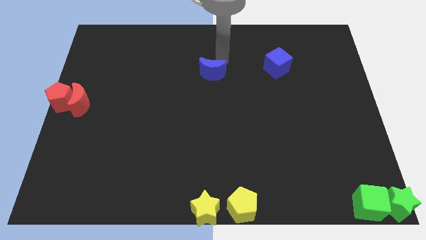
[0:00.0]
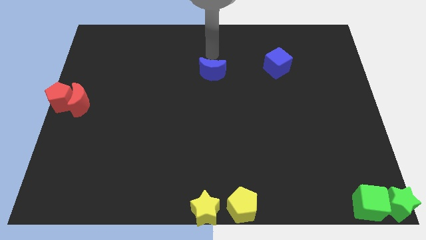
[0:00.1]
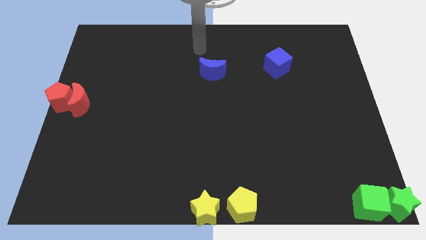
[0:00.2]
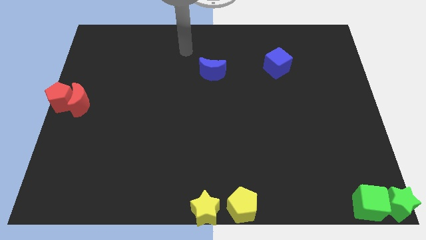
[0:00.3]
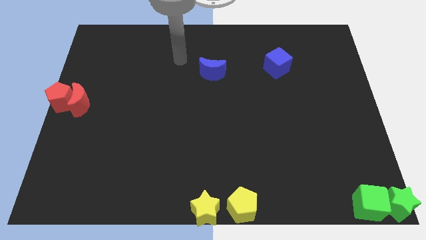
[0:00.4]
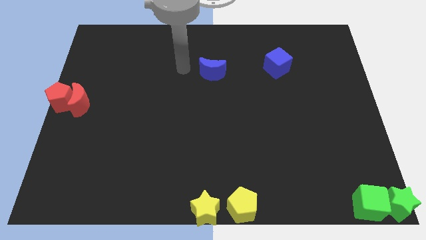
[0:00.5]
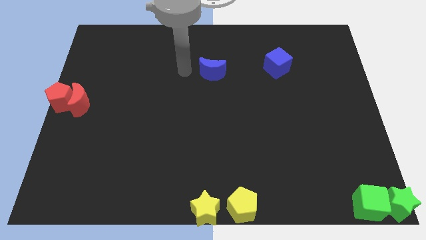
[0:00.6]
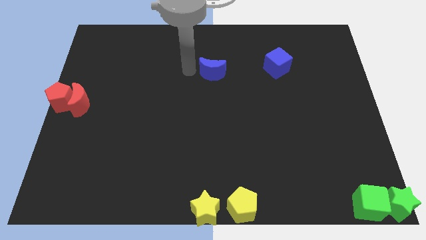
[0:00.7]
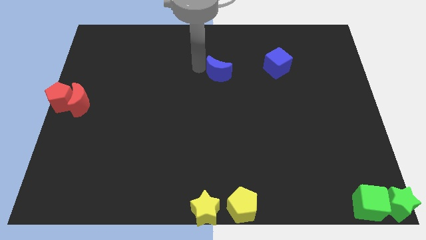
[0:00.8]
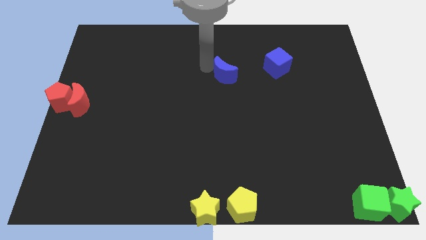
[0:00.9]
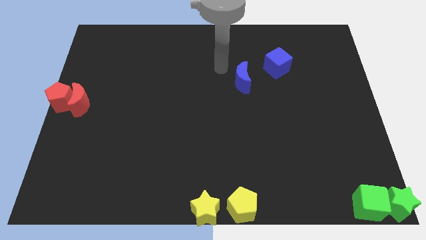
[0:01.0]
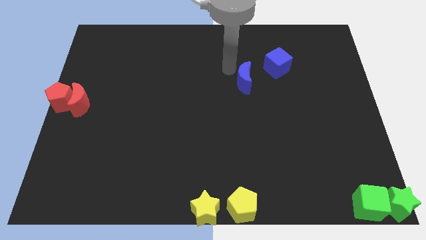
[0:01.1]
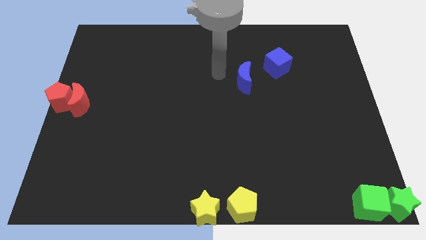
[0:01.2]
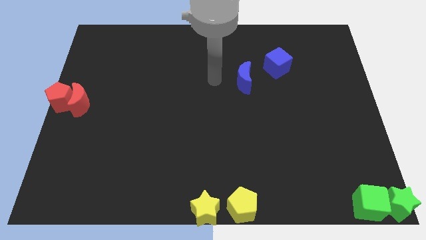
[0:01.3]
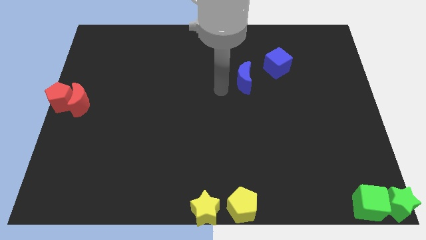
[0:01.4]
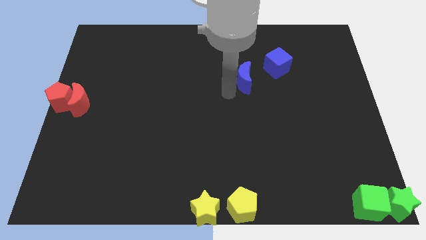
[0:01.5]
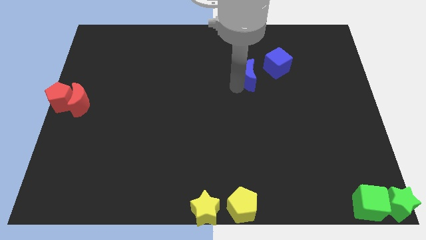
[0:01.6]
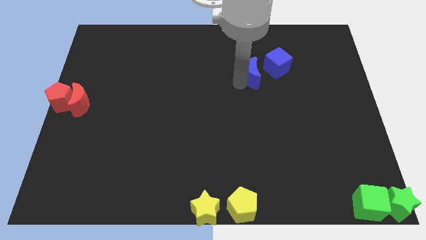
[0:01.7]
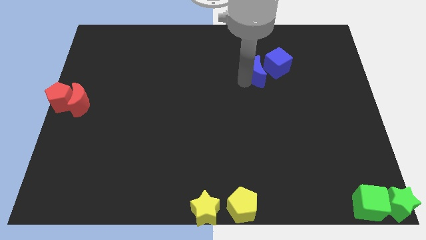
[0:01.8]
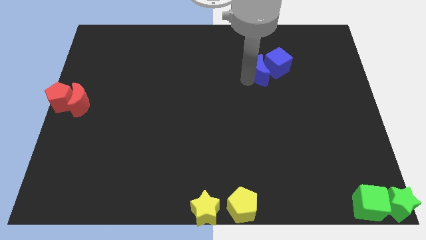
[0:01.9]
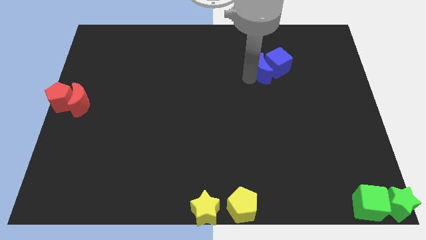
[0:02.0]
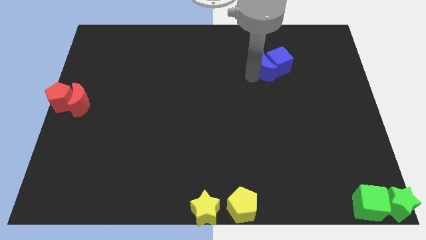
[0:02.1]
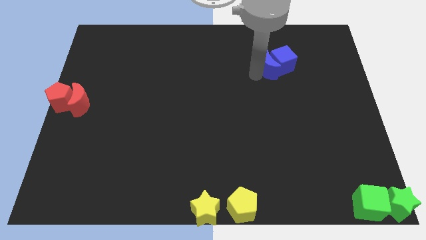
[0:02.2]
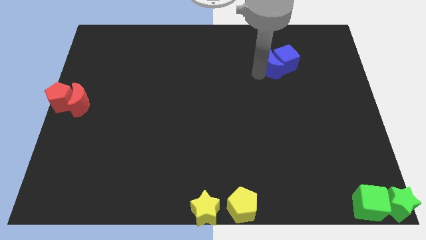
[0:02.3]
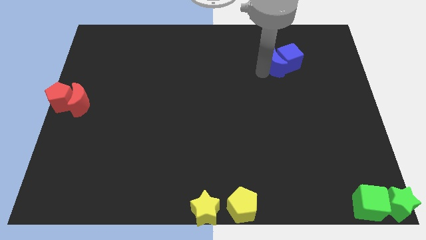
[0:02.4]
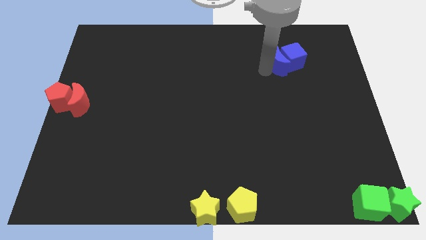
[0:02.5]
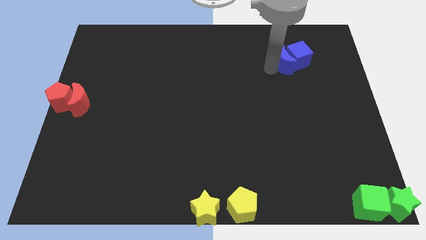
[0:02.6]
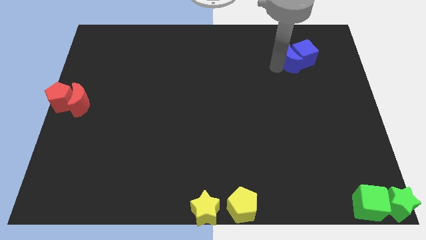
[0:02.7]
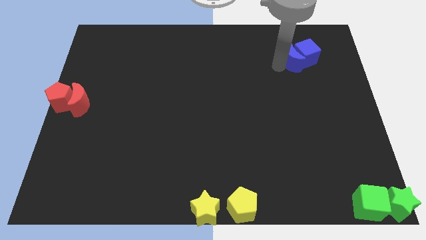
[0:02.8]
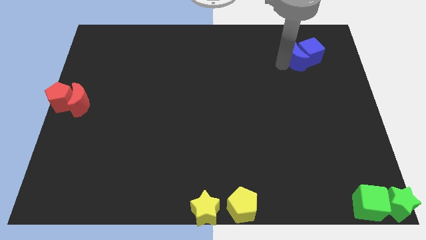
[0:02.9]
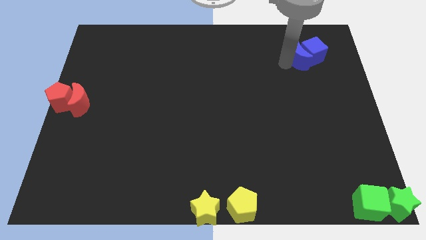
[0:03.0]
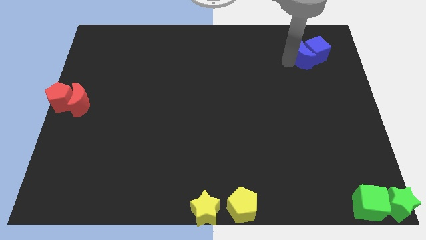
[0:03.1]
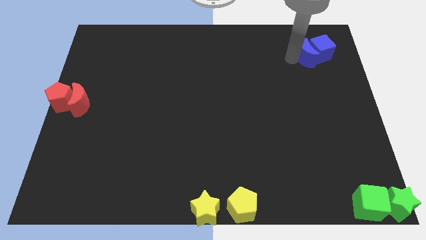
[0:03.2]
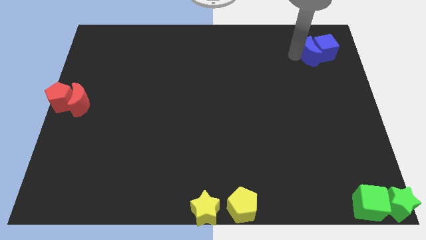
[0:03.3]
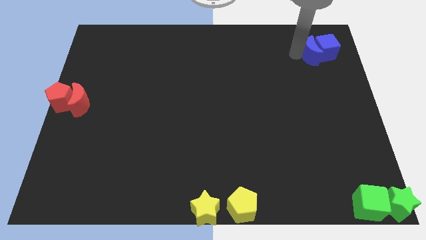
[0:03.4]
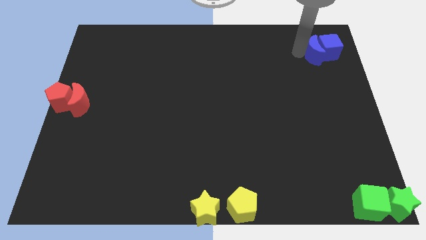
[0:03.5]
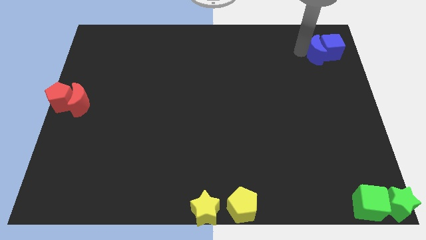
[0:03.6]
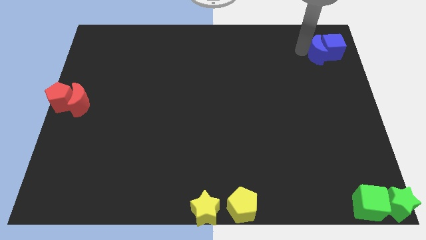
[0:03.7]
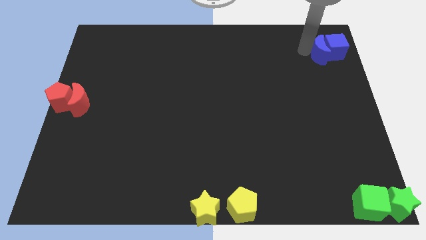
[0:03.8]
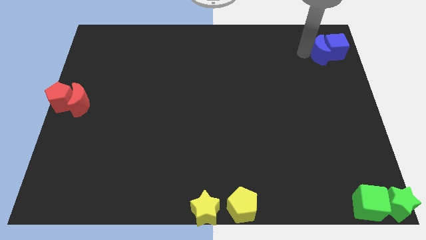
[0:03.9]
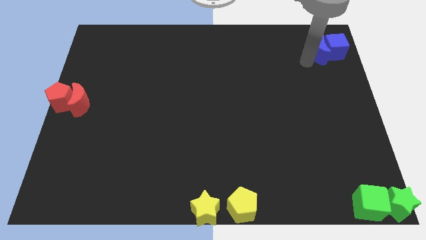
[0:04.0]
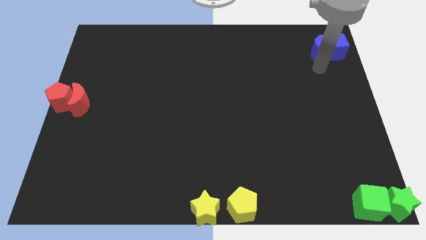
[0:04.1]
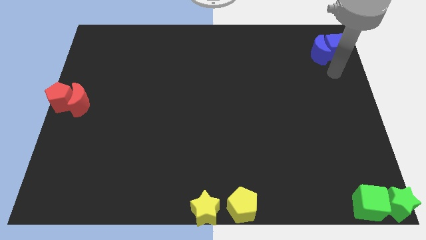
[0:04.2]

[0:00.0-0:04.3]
move the blue blocks to the top right of the board

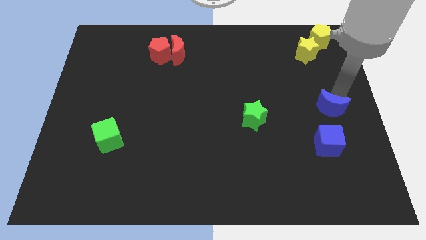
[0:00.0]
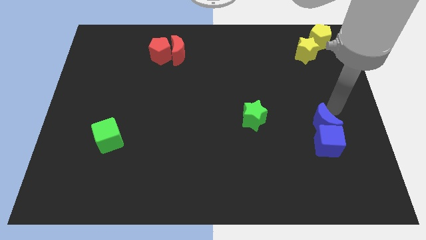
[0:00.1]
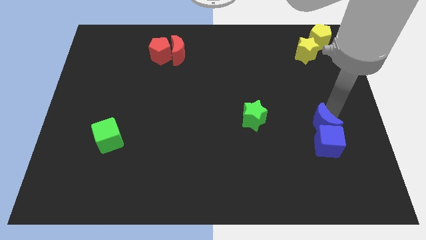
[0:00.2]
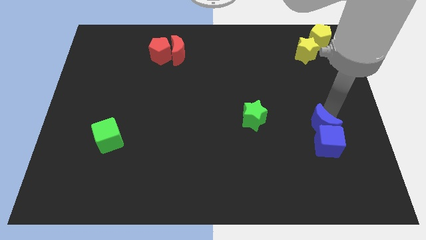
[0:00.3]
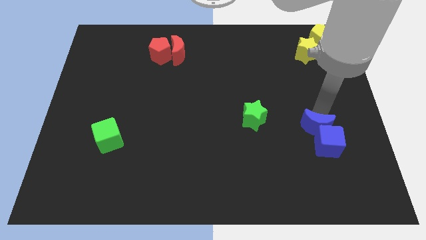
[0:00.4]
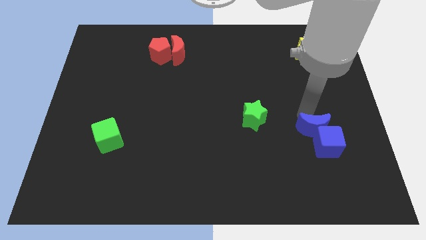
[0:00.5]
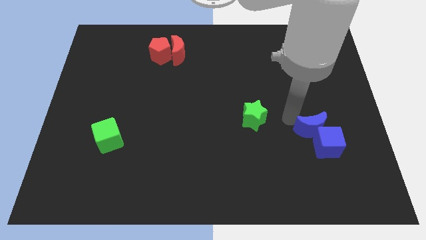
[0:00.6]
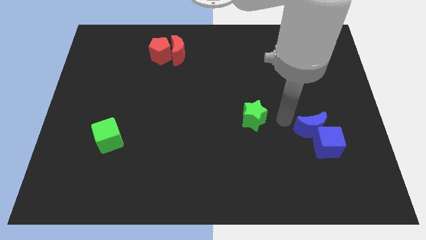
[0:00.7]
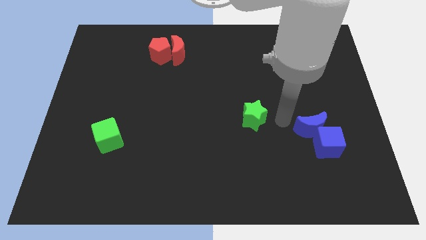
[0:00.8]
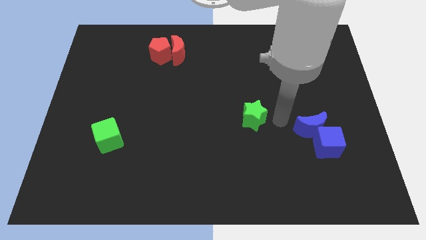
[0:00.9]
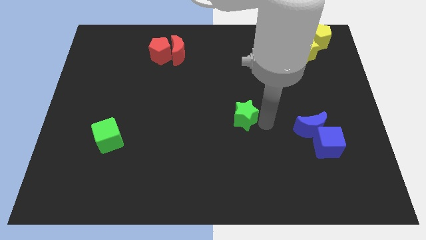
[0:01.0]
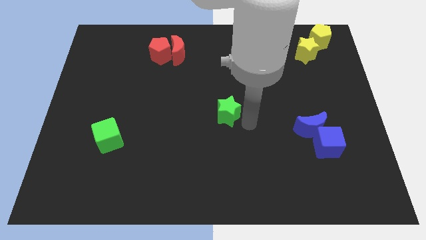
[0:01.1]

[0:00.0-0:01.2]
push the blue moon close to the blue cube

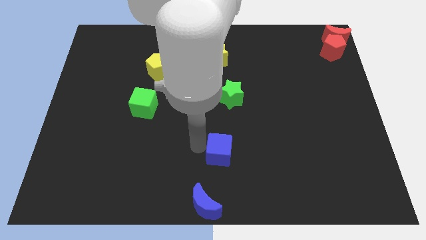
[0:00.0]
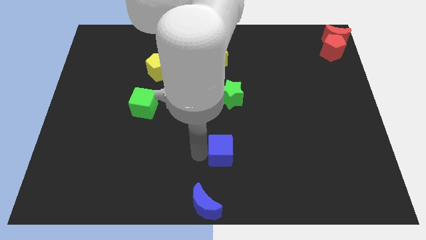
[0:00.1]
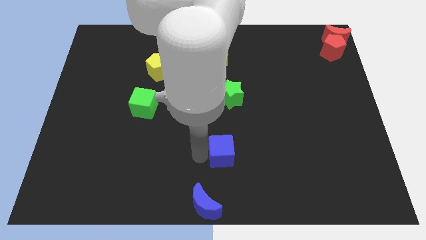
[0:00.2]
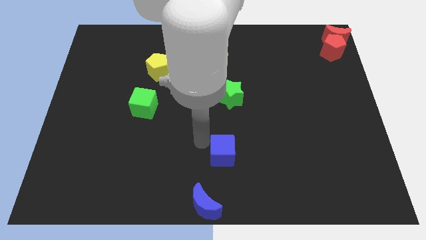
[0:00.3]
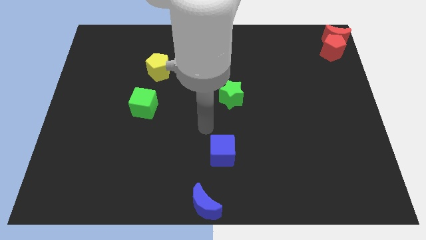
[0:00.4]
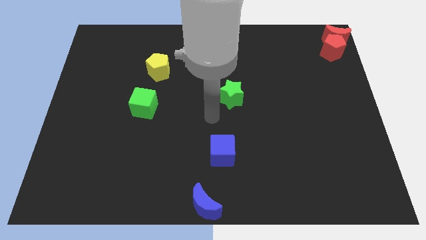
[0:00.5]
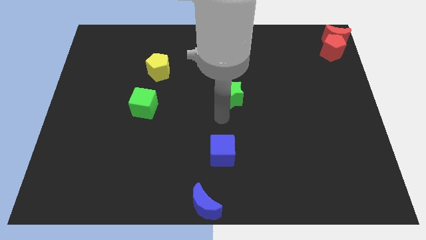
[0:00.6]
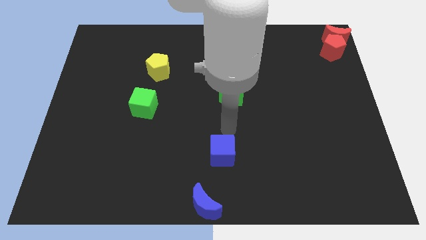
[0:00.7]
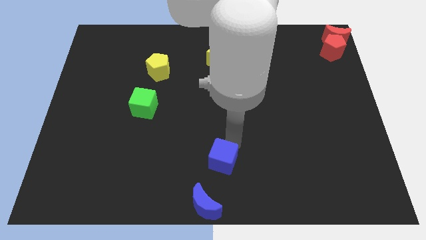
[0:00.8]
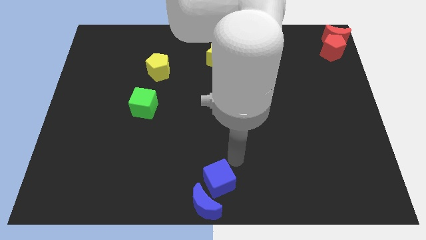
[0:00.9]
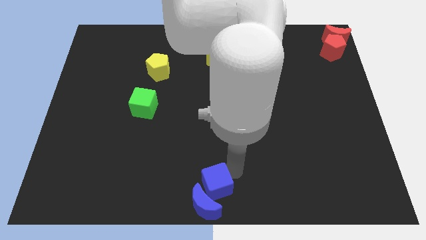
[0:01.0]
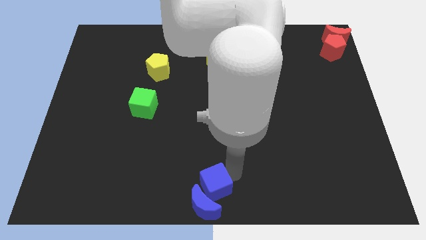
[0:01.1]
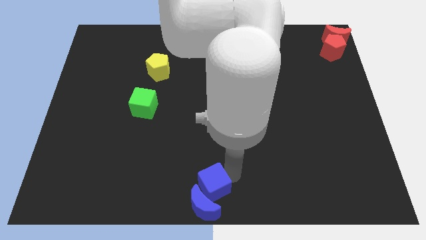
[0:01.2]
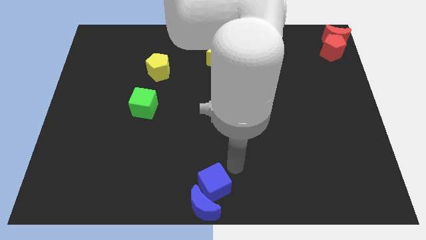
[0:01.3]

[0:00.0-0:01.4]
move blue cube near to blue crescent

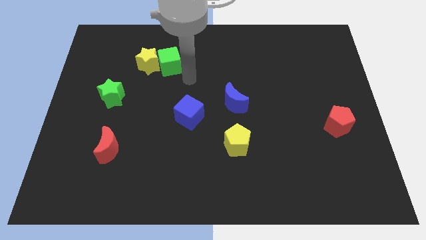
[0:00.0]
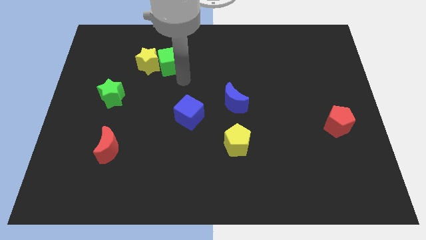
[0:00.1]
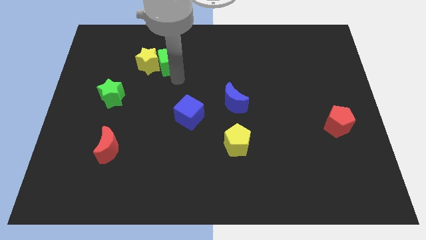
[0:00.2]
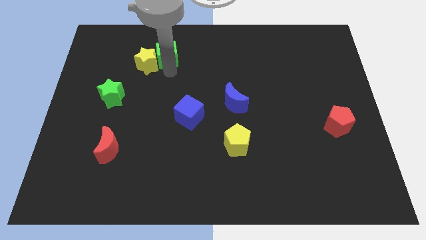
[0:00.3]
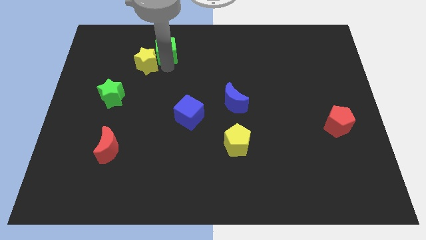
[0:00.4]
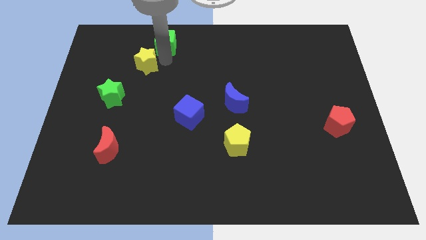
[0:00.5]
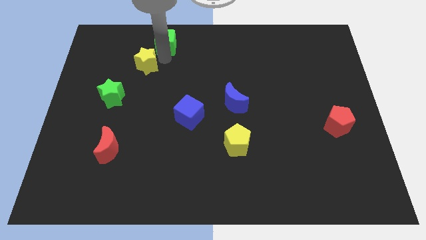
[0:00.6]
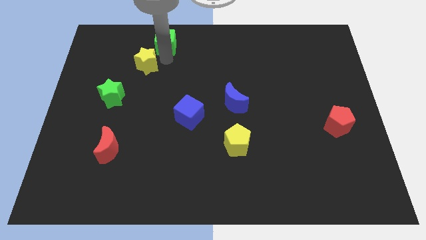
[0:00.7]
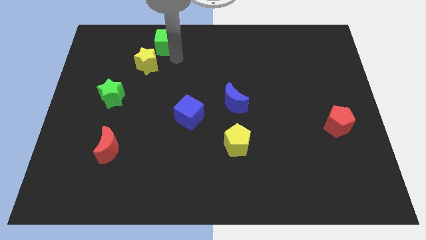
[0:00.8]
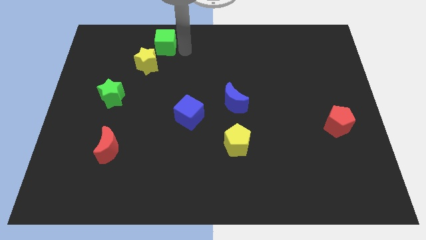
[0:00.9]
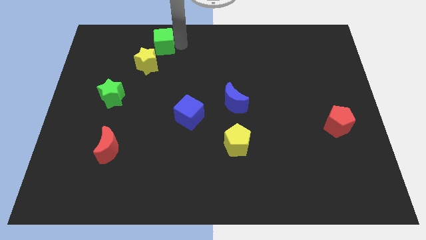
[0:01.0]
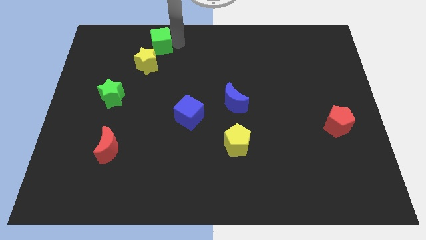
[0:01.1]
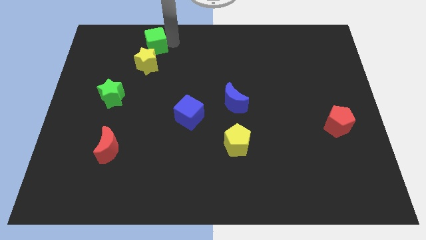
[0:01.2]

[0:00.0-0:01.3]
move the green cube above the yellow star

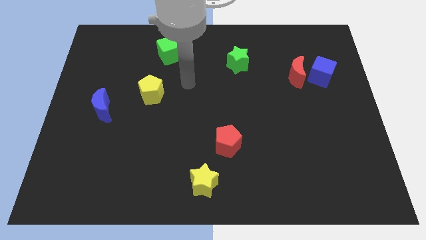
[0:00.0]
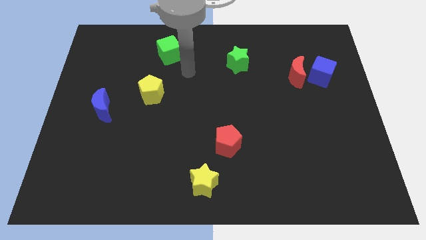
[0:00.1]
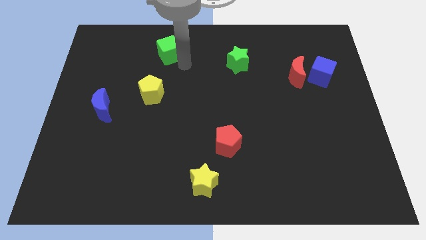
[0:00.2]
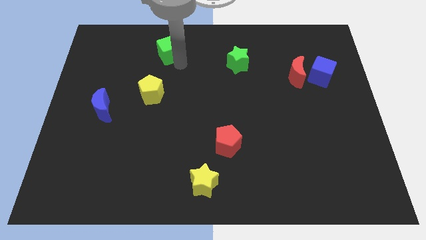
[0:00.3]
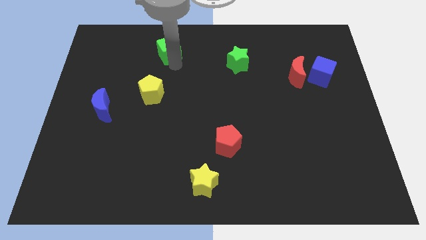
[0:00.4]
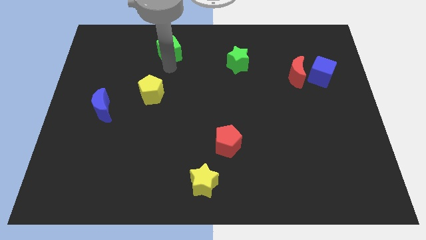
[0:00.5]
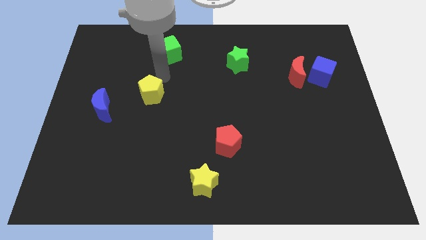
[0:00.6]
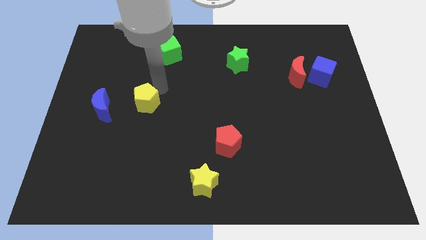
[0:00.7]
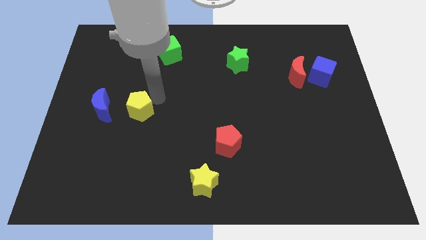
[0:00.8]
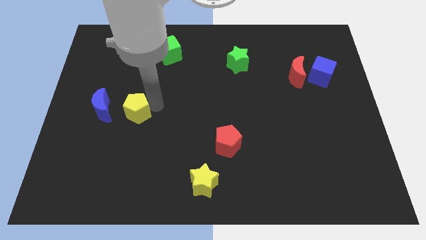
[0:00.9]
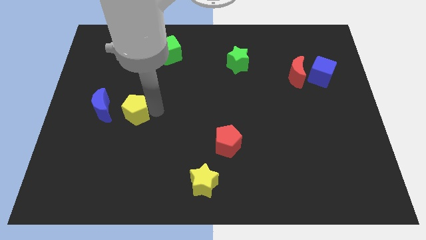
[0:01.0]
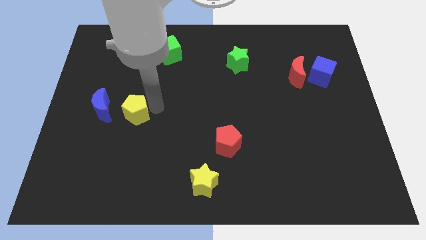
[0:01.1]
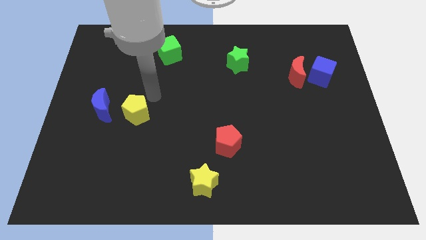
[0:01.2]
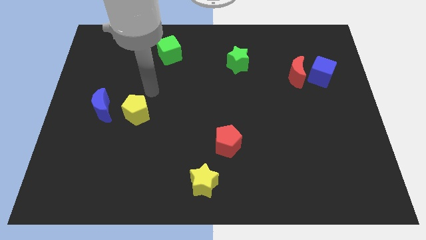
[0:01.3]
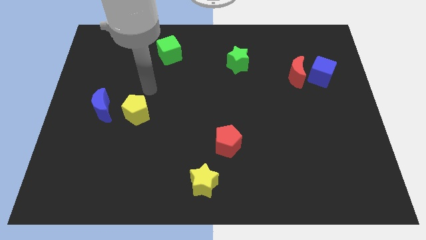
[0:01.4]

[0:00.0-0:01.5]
place the yellow pentagon right to the blue crescent
